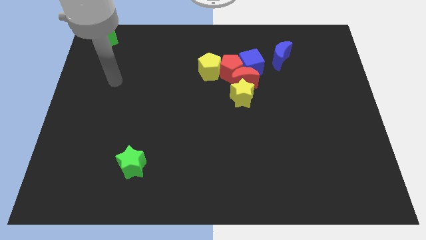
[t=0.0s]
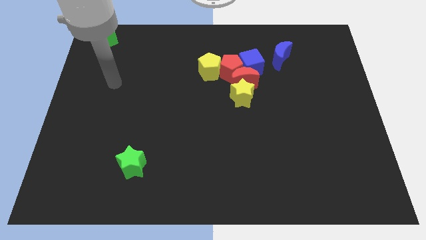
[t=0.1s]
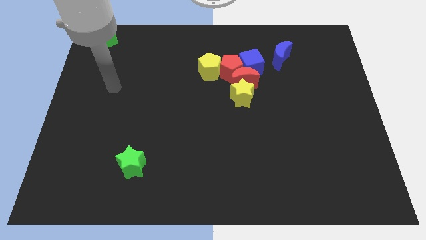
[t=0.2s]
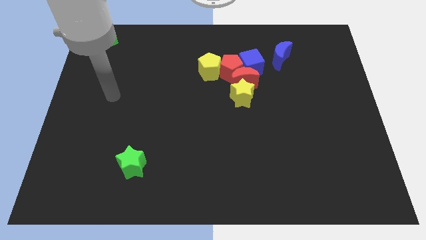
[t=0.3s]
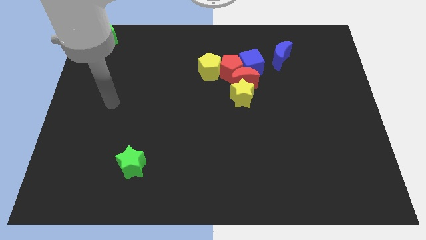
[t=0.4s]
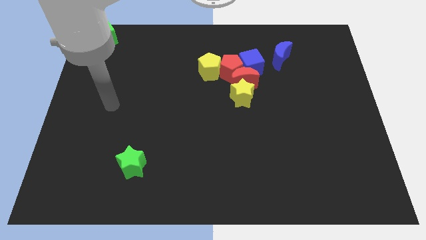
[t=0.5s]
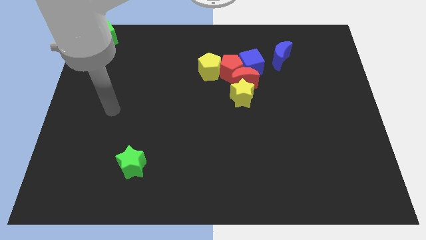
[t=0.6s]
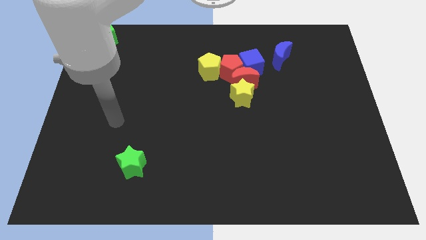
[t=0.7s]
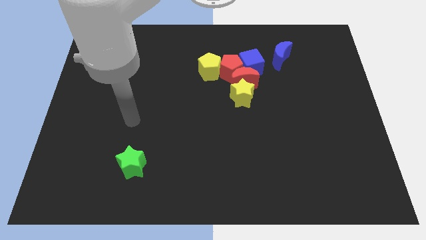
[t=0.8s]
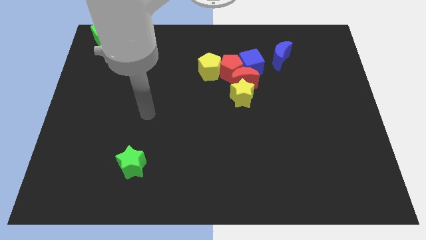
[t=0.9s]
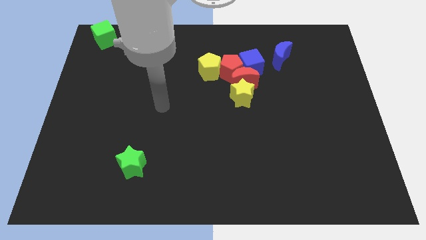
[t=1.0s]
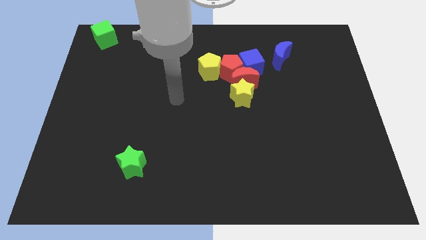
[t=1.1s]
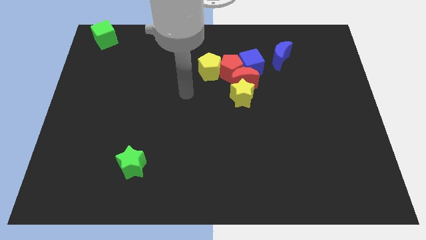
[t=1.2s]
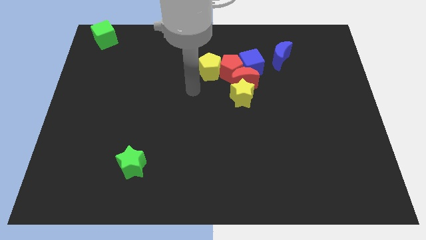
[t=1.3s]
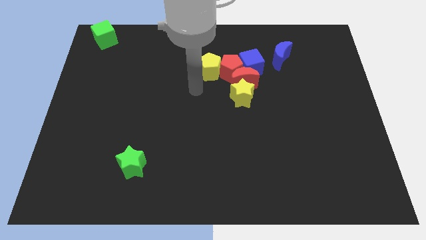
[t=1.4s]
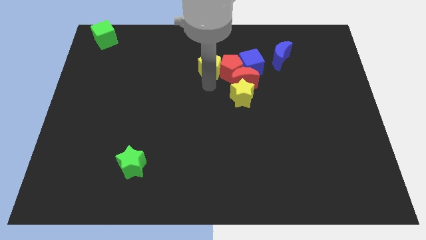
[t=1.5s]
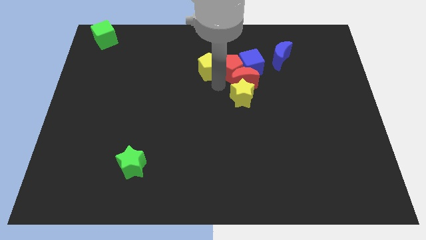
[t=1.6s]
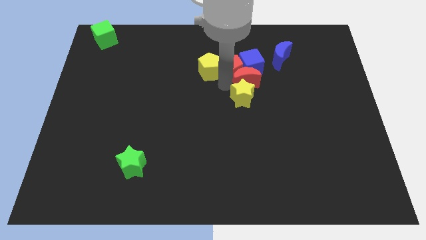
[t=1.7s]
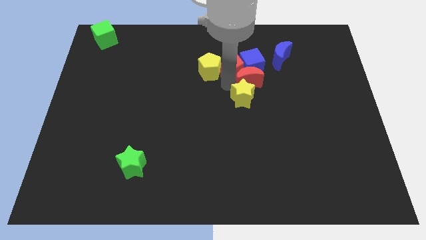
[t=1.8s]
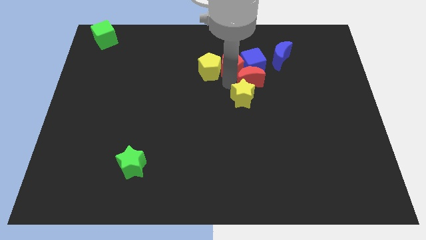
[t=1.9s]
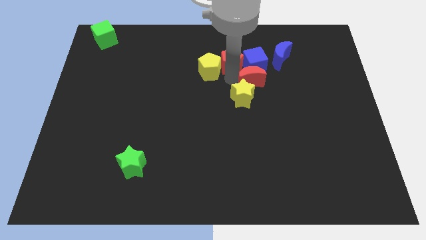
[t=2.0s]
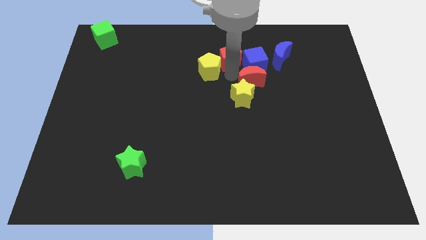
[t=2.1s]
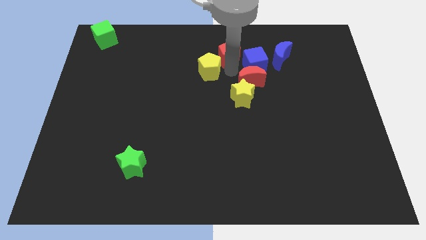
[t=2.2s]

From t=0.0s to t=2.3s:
touch the bottom of red pentagon

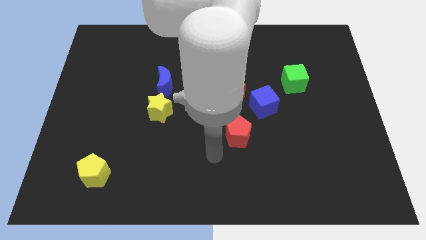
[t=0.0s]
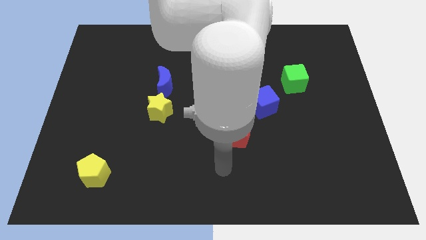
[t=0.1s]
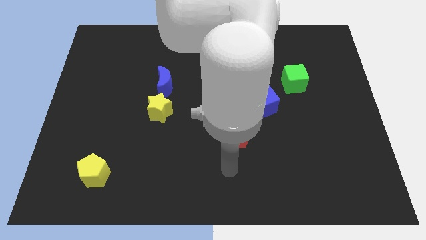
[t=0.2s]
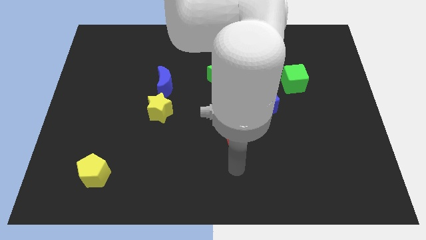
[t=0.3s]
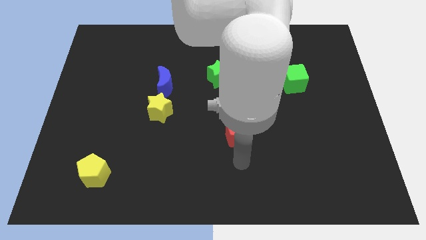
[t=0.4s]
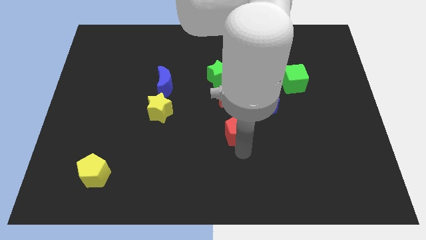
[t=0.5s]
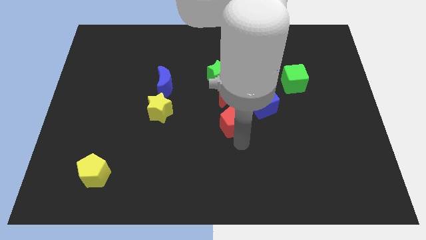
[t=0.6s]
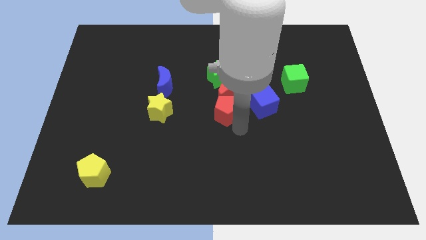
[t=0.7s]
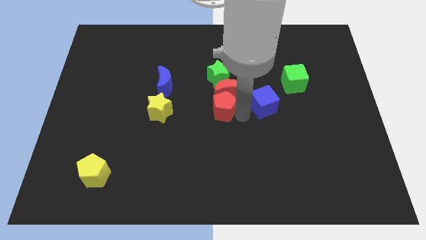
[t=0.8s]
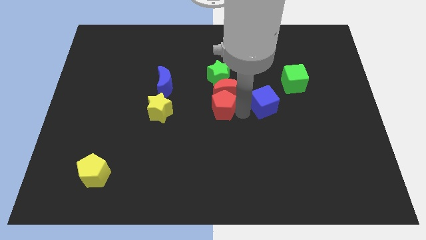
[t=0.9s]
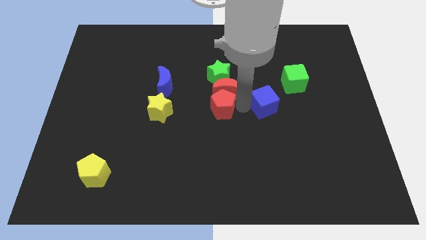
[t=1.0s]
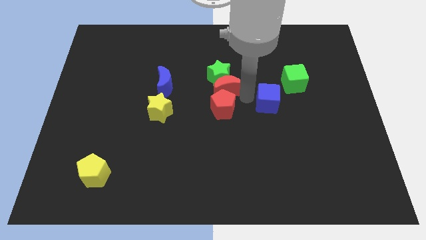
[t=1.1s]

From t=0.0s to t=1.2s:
push the red pentagon into the bottom side of the red moon

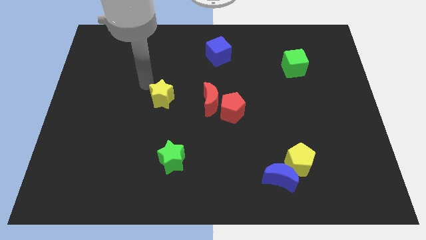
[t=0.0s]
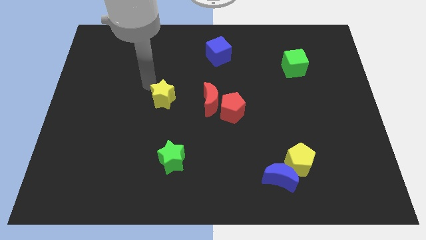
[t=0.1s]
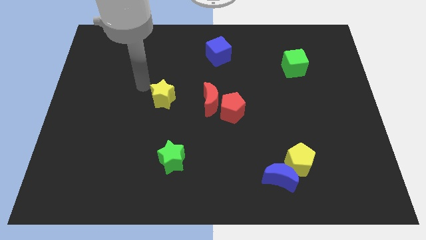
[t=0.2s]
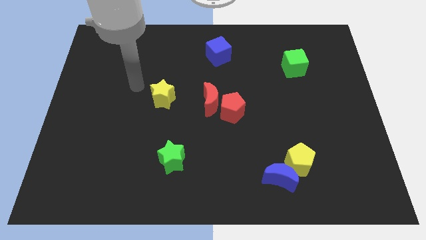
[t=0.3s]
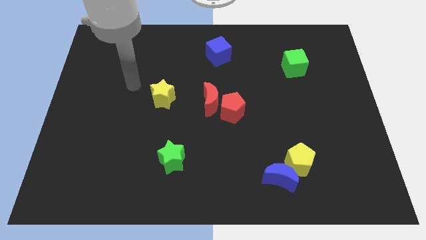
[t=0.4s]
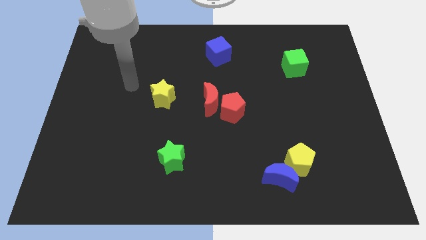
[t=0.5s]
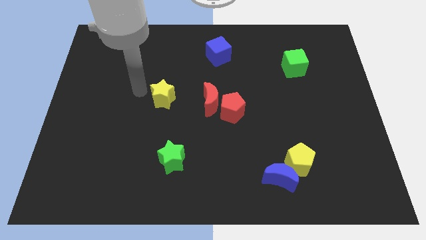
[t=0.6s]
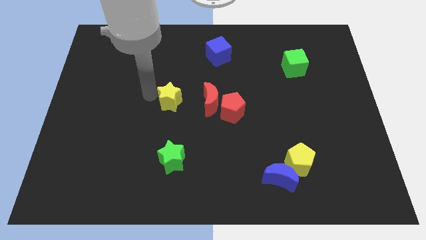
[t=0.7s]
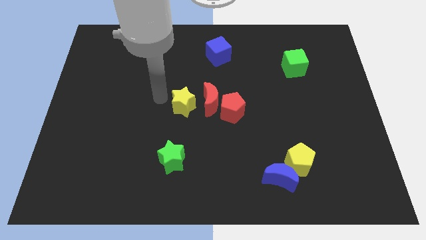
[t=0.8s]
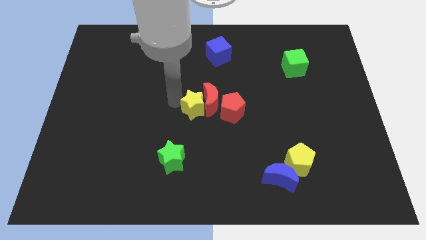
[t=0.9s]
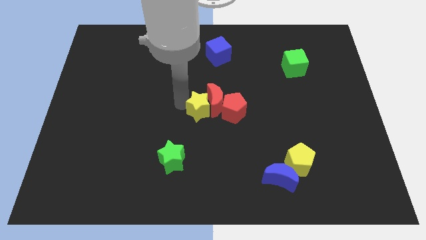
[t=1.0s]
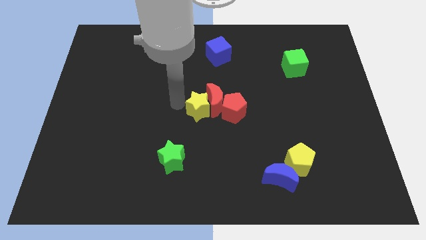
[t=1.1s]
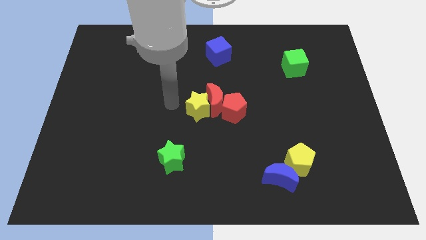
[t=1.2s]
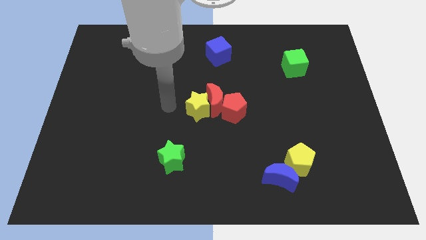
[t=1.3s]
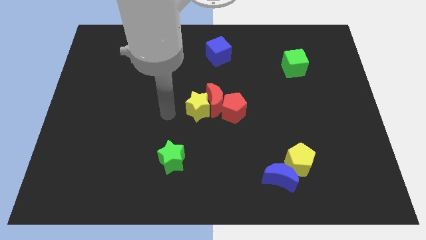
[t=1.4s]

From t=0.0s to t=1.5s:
push the yellow star to the left of the red crescent

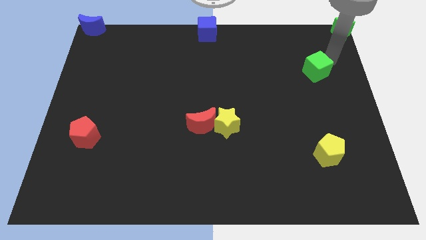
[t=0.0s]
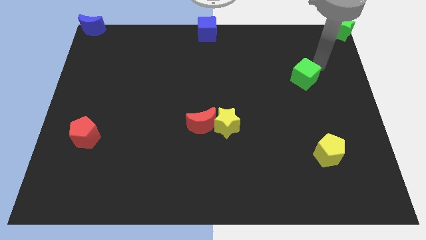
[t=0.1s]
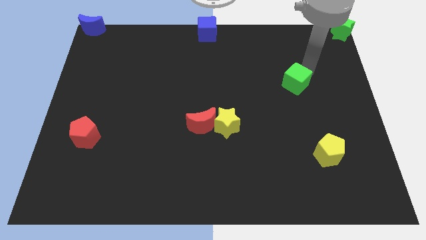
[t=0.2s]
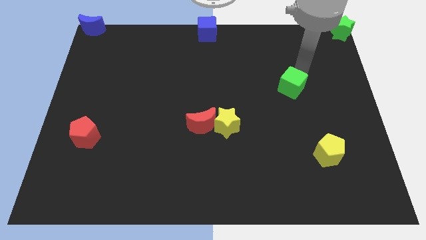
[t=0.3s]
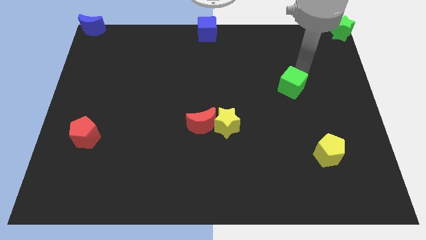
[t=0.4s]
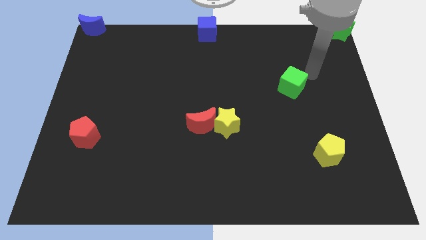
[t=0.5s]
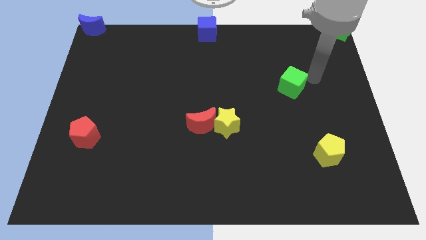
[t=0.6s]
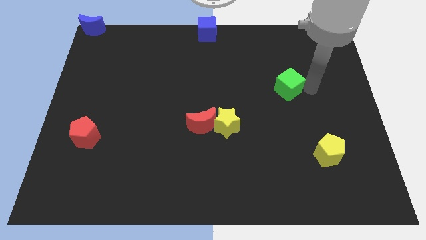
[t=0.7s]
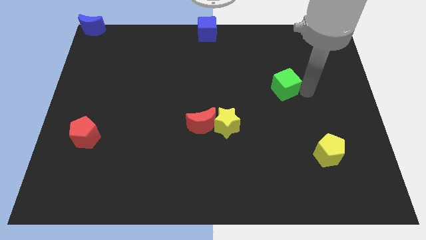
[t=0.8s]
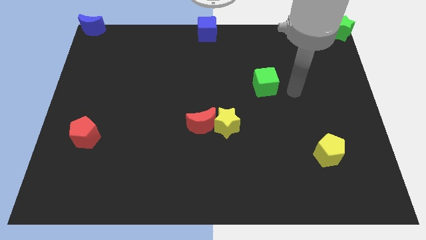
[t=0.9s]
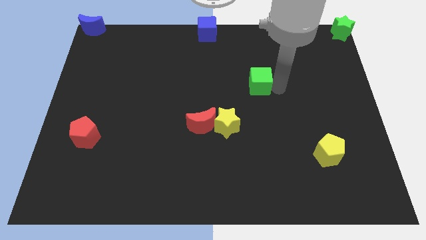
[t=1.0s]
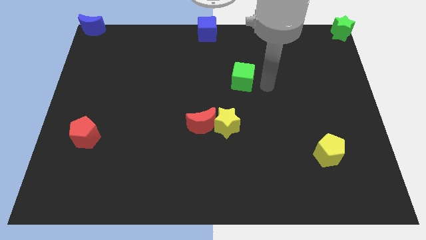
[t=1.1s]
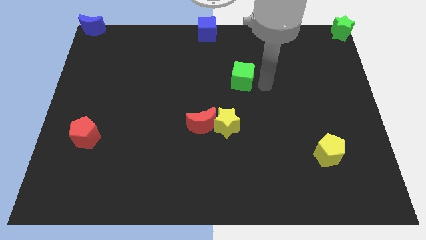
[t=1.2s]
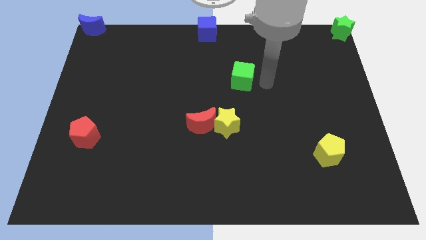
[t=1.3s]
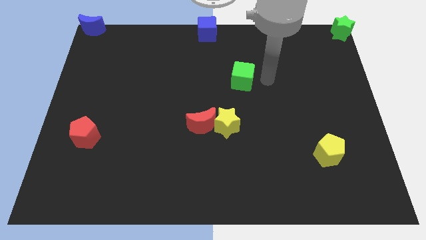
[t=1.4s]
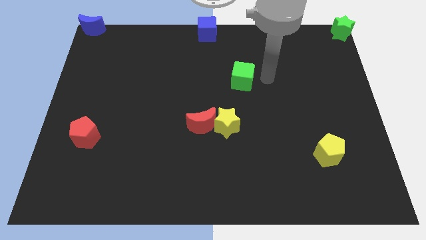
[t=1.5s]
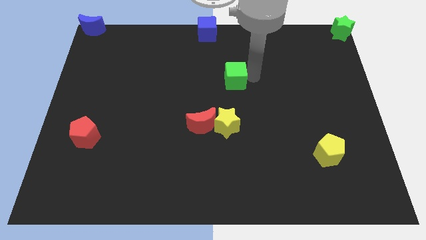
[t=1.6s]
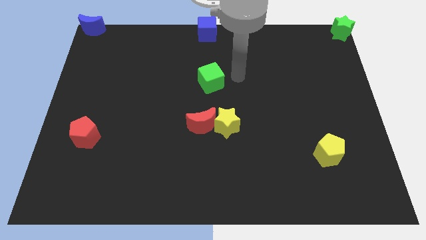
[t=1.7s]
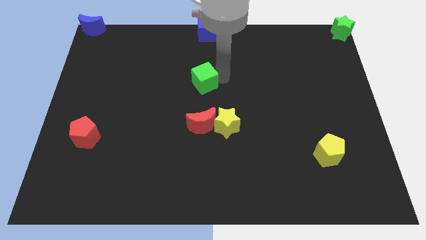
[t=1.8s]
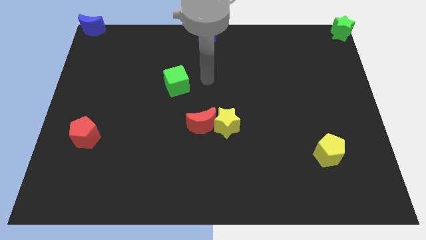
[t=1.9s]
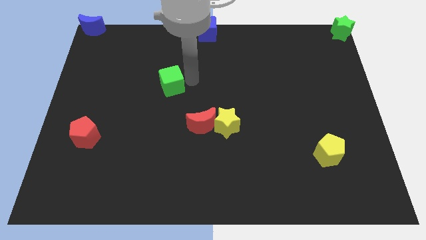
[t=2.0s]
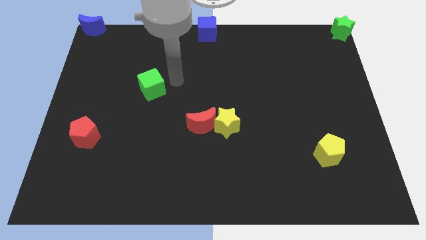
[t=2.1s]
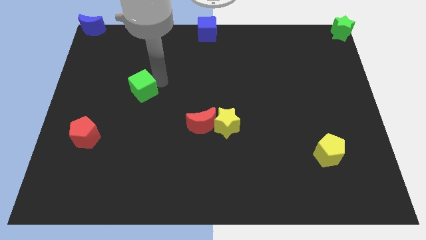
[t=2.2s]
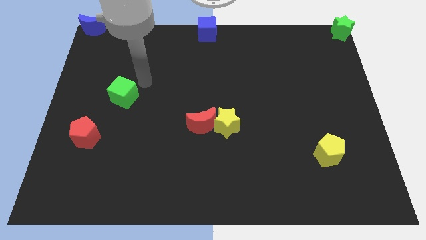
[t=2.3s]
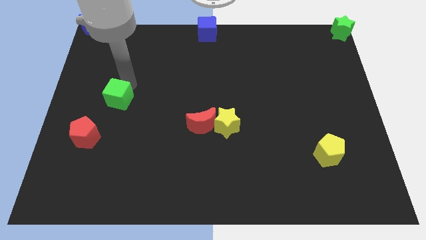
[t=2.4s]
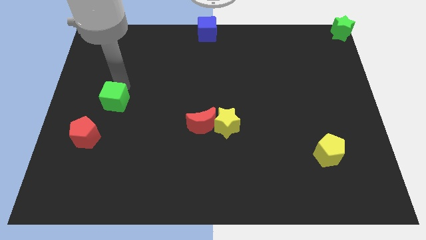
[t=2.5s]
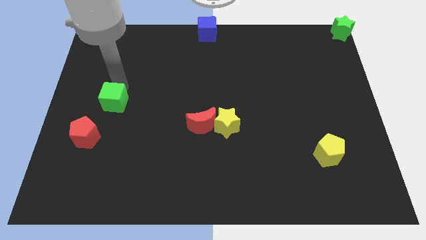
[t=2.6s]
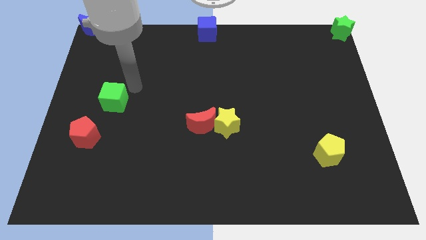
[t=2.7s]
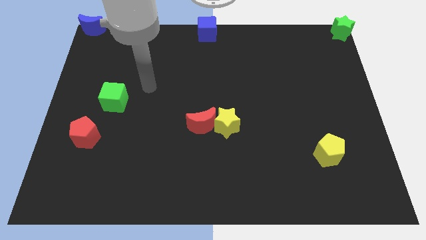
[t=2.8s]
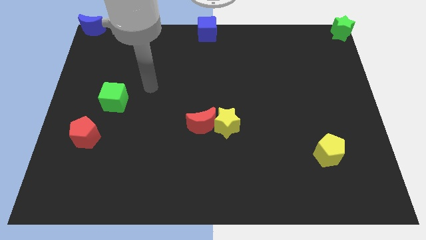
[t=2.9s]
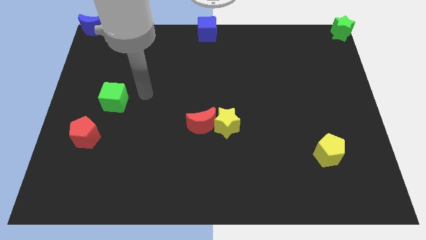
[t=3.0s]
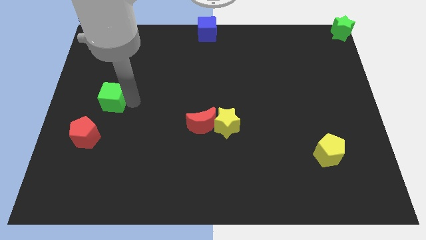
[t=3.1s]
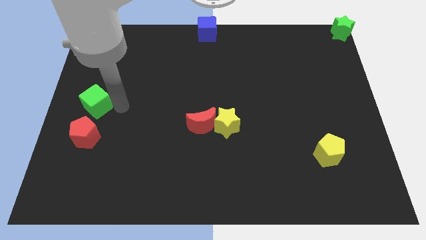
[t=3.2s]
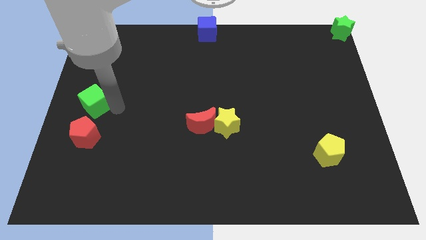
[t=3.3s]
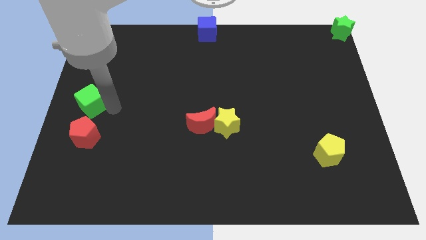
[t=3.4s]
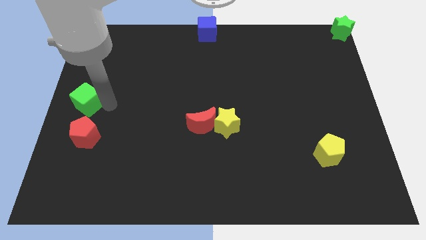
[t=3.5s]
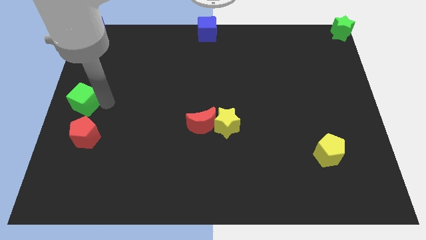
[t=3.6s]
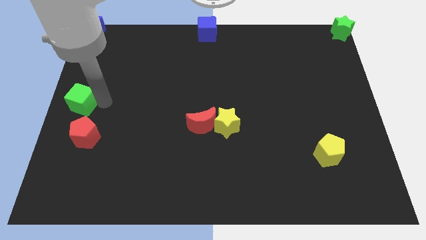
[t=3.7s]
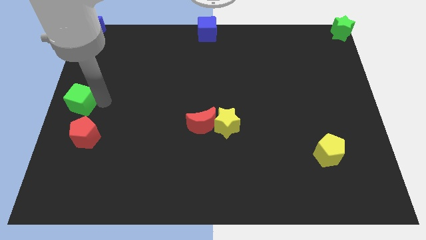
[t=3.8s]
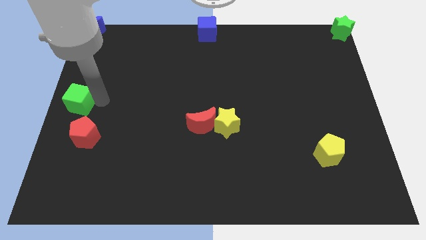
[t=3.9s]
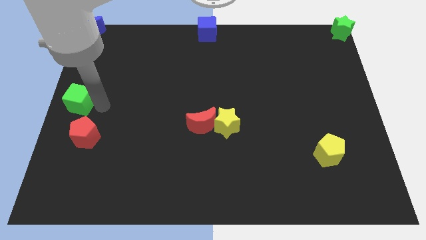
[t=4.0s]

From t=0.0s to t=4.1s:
push the green cube to the left center of the board
